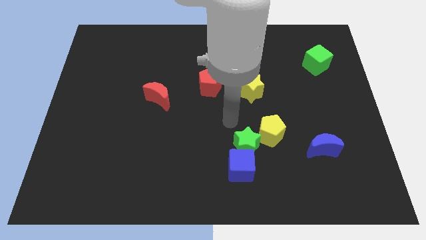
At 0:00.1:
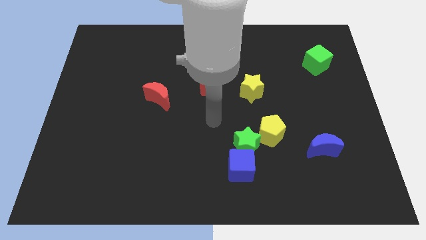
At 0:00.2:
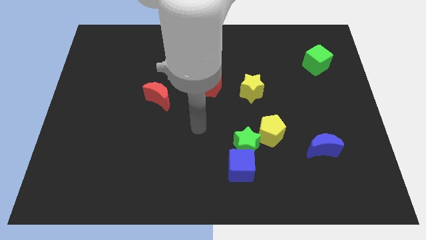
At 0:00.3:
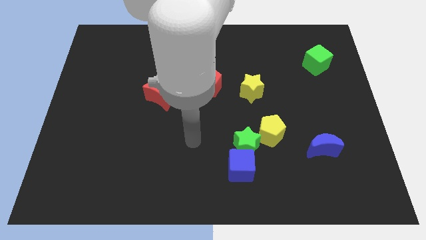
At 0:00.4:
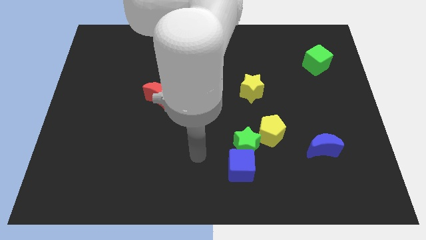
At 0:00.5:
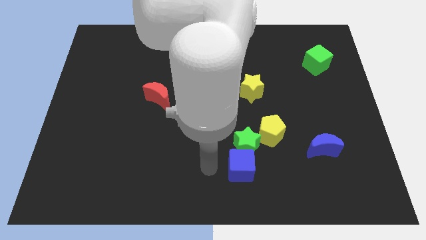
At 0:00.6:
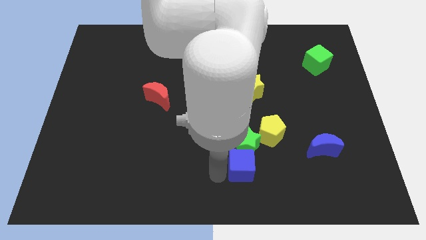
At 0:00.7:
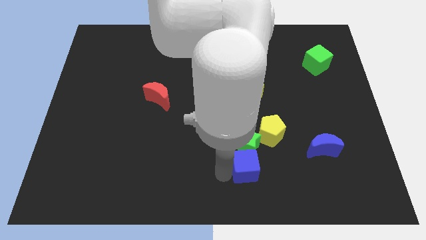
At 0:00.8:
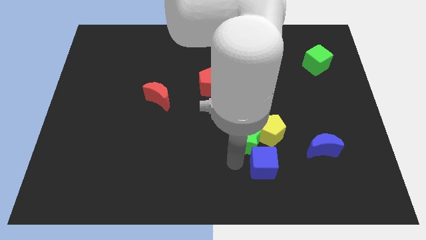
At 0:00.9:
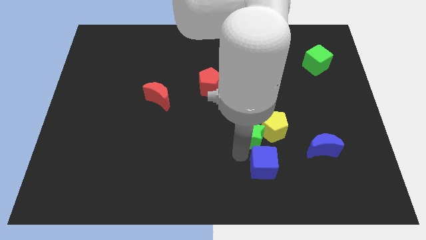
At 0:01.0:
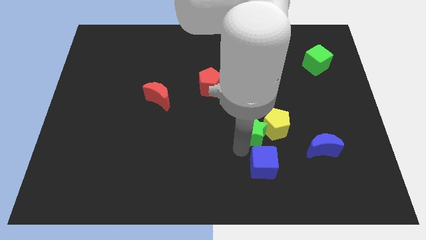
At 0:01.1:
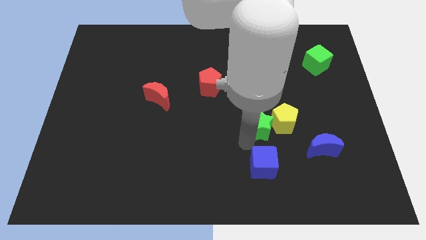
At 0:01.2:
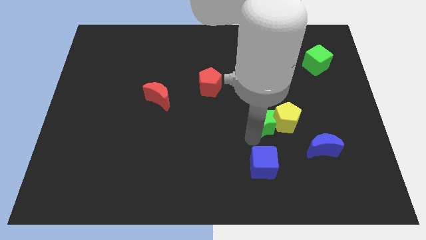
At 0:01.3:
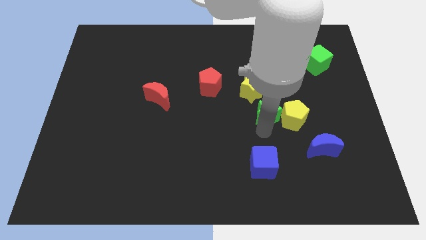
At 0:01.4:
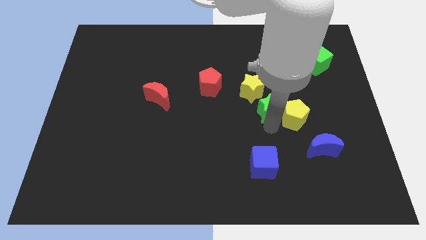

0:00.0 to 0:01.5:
move the green star above the blue cube

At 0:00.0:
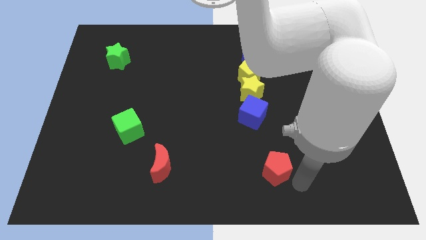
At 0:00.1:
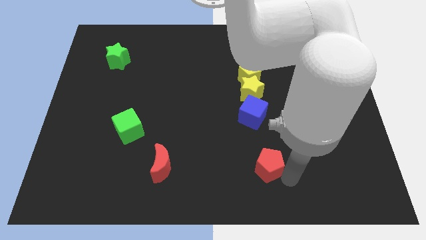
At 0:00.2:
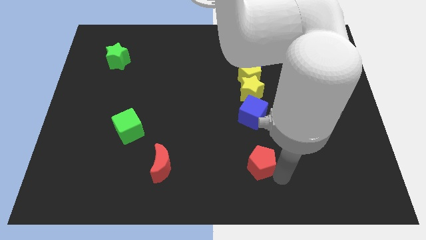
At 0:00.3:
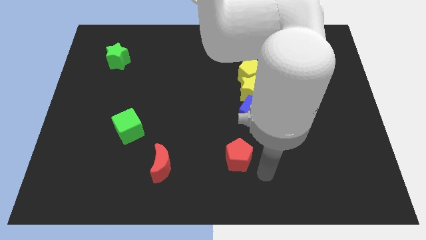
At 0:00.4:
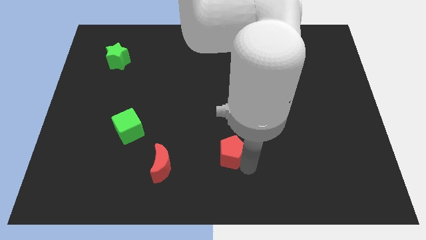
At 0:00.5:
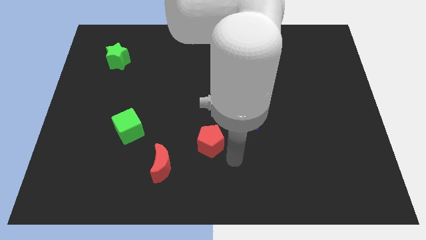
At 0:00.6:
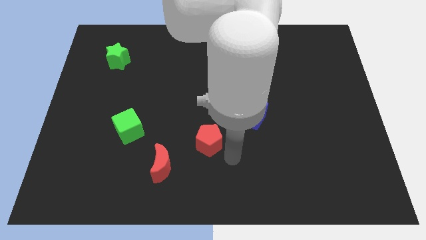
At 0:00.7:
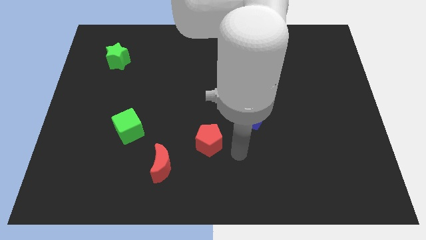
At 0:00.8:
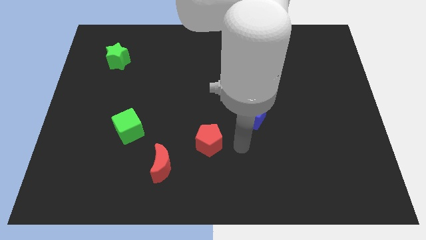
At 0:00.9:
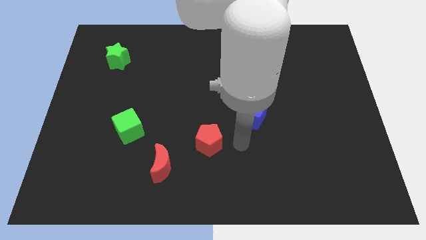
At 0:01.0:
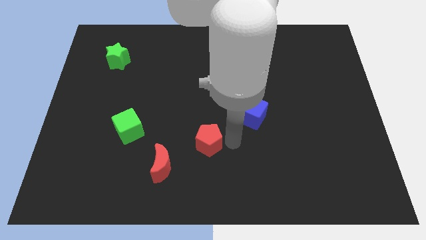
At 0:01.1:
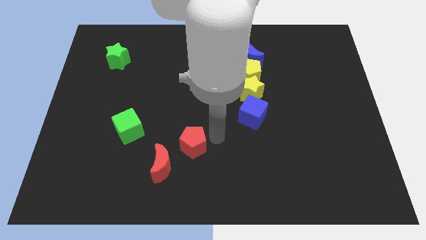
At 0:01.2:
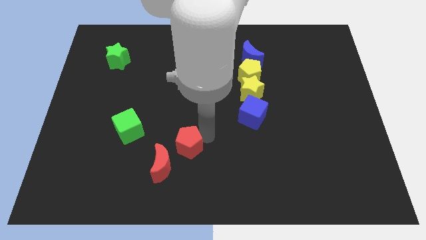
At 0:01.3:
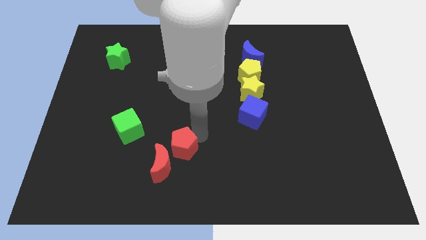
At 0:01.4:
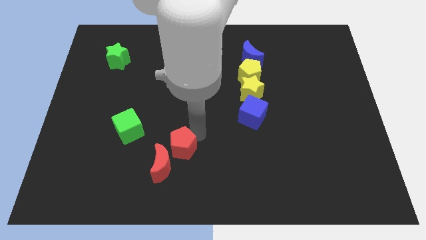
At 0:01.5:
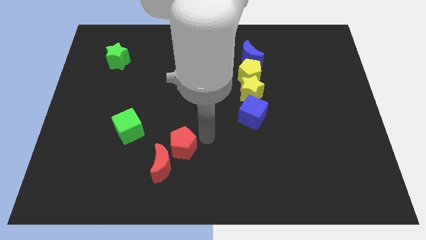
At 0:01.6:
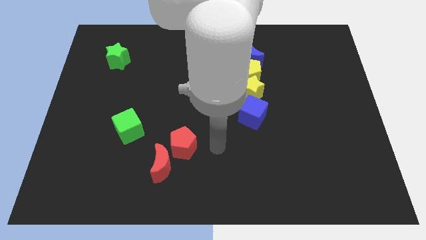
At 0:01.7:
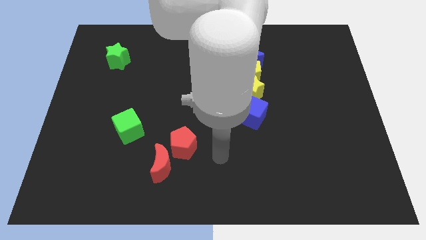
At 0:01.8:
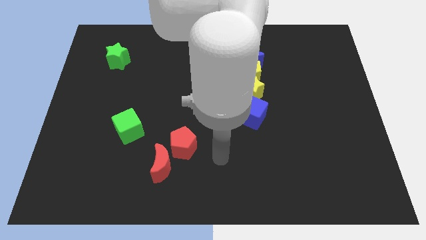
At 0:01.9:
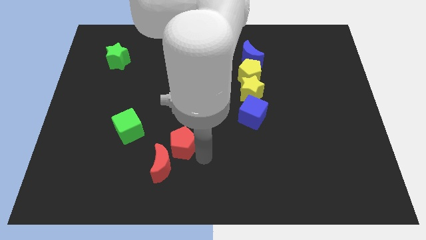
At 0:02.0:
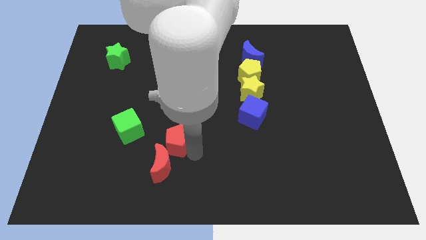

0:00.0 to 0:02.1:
move the red pentagon to the top right of red crescent

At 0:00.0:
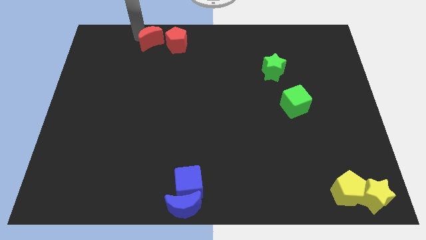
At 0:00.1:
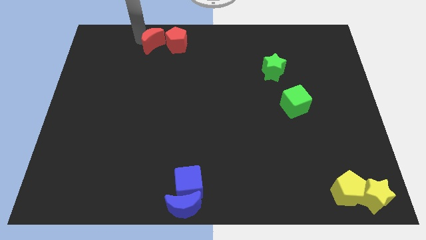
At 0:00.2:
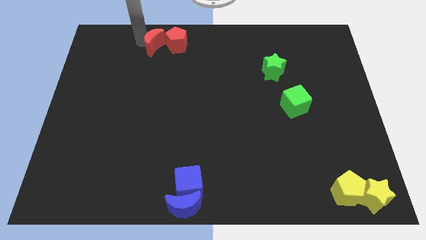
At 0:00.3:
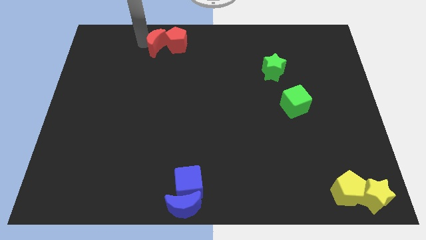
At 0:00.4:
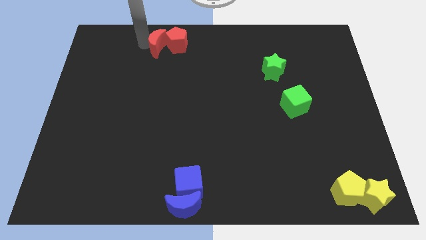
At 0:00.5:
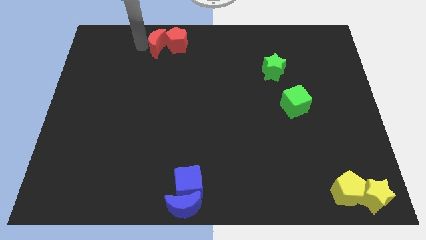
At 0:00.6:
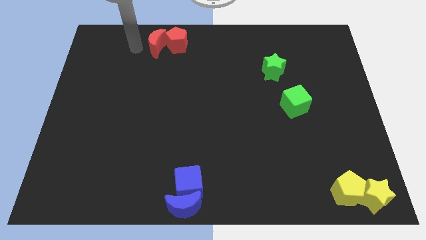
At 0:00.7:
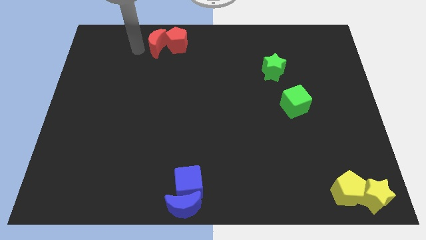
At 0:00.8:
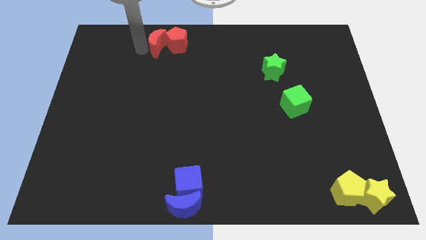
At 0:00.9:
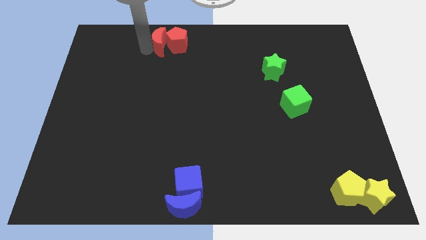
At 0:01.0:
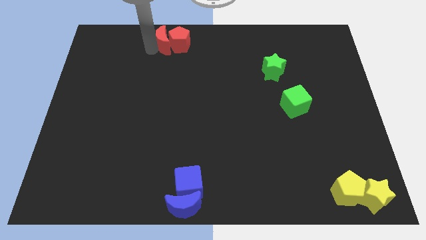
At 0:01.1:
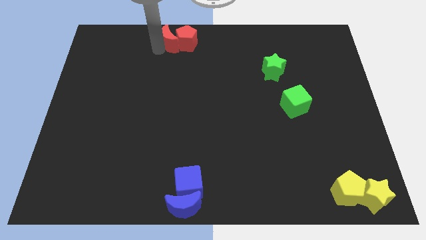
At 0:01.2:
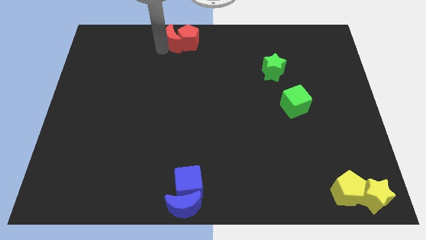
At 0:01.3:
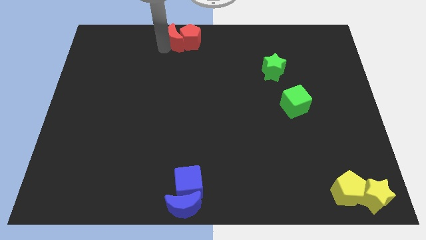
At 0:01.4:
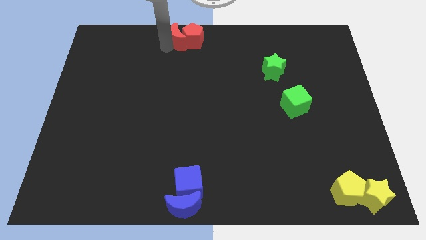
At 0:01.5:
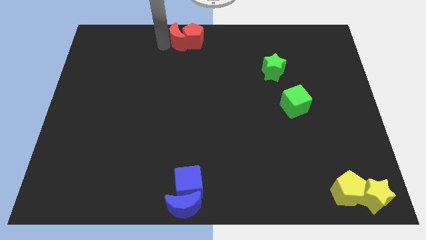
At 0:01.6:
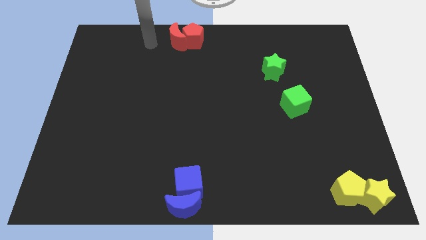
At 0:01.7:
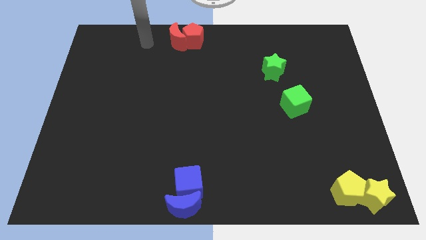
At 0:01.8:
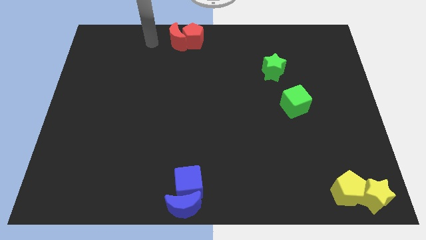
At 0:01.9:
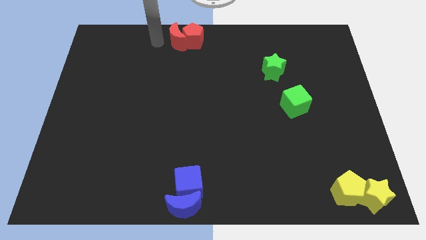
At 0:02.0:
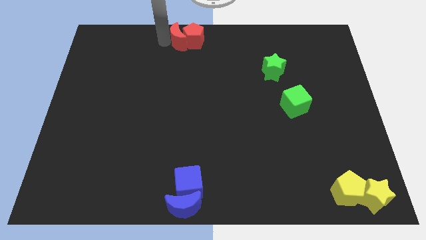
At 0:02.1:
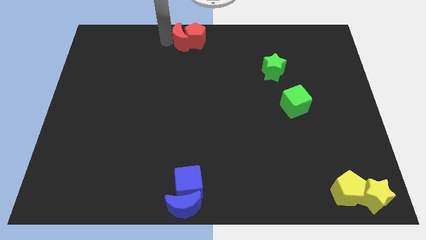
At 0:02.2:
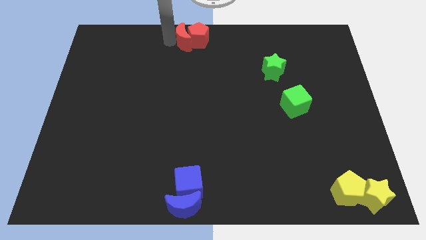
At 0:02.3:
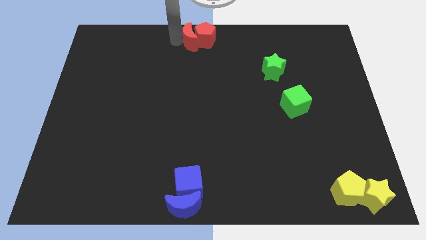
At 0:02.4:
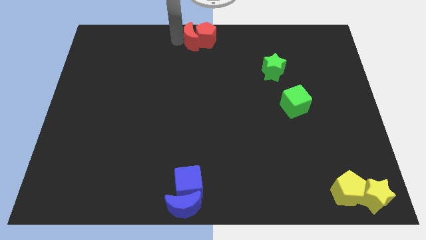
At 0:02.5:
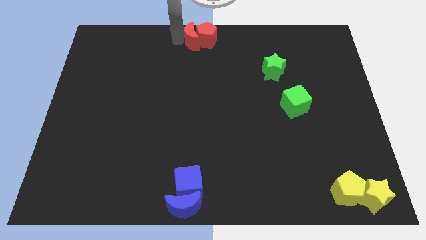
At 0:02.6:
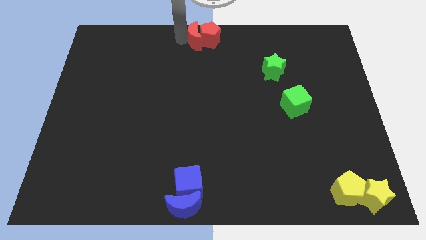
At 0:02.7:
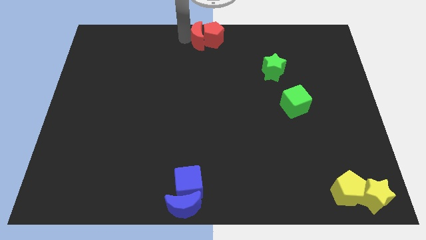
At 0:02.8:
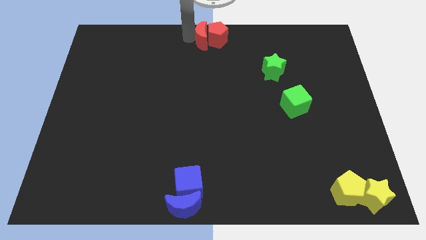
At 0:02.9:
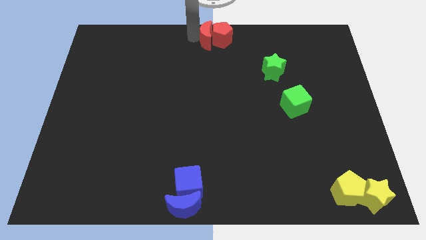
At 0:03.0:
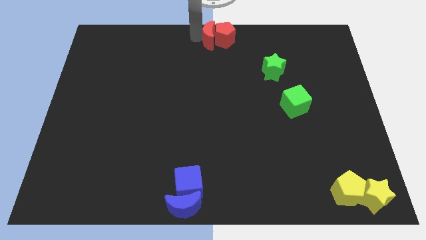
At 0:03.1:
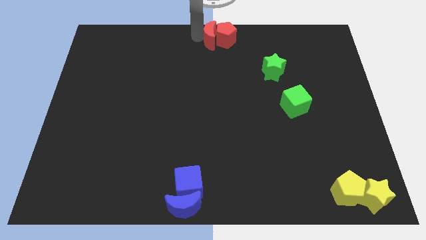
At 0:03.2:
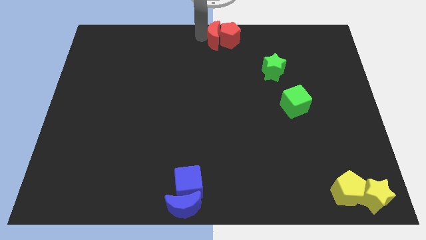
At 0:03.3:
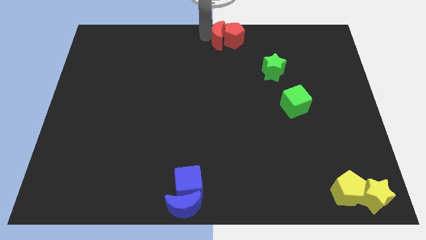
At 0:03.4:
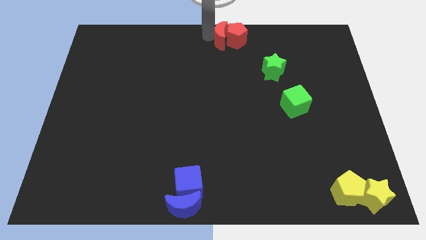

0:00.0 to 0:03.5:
place the red blocks at the center of the board

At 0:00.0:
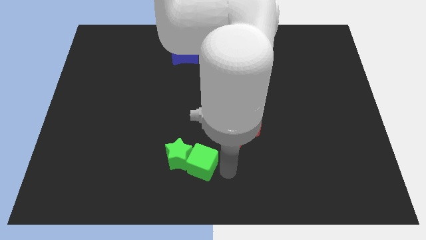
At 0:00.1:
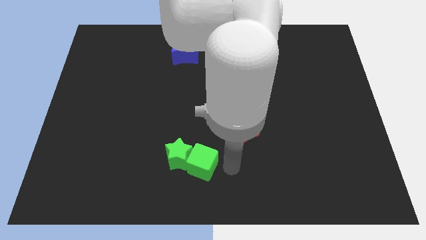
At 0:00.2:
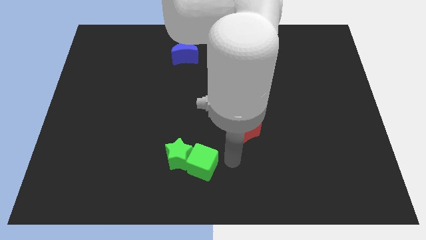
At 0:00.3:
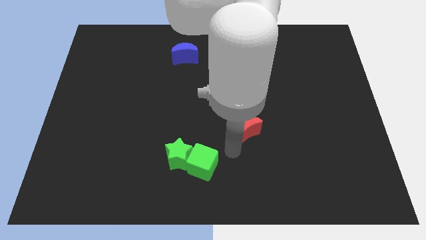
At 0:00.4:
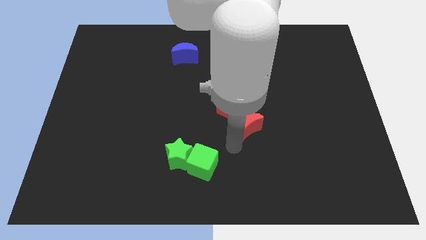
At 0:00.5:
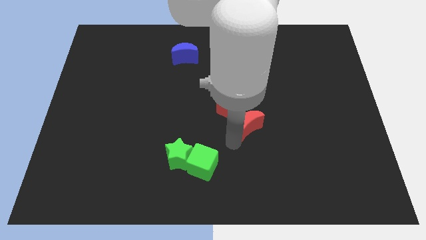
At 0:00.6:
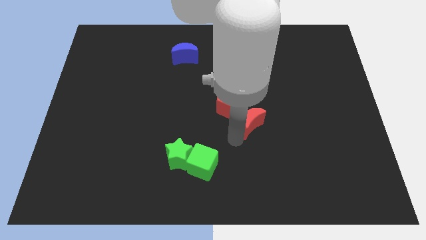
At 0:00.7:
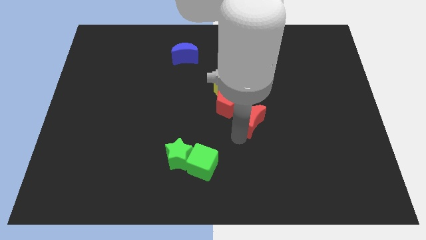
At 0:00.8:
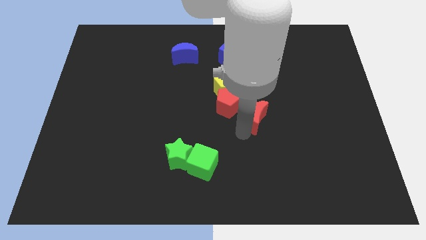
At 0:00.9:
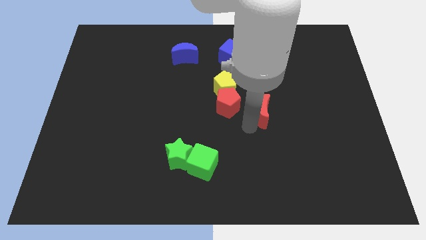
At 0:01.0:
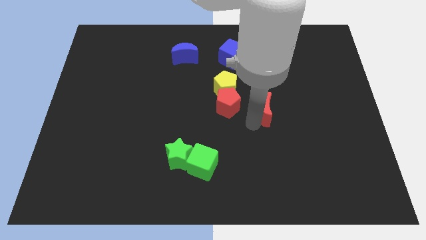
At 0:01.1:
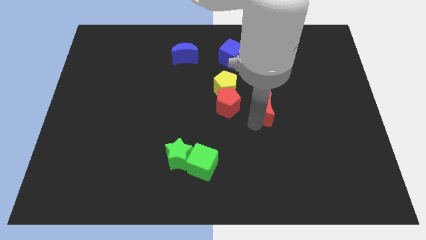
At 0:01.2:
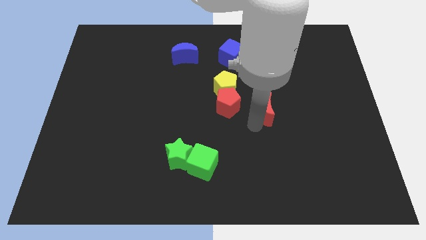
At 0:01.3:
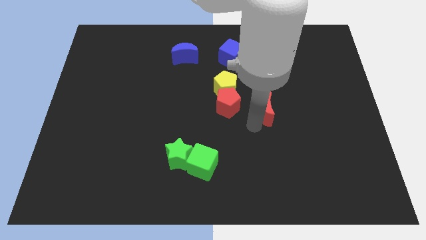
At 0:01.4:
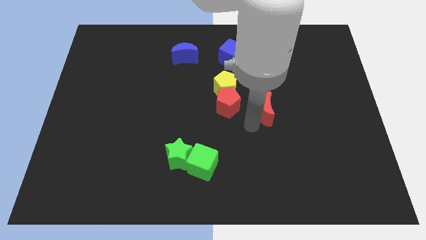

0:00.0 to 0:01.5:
move the red moon slightly up

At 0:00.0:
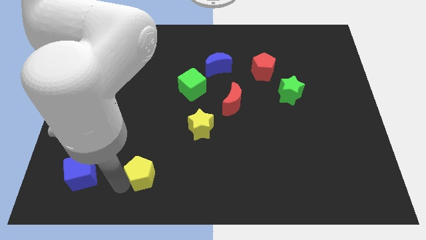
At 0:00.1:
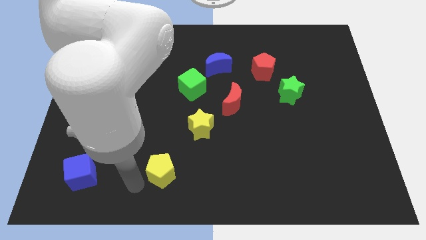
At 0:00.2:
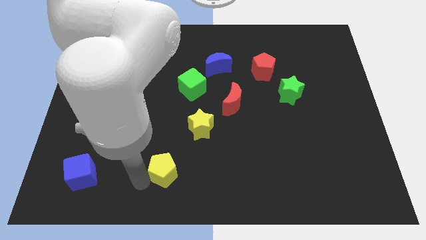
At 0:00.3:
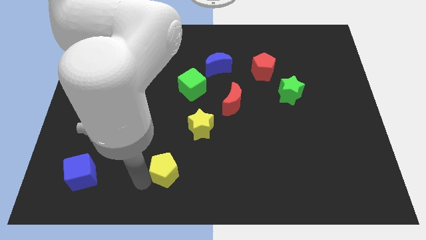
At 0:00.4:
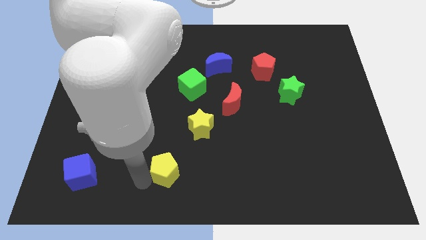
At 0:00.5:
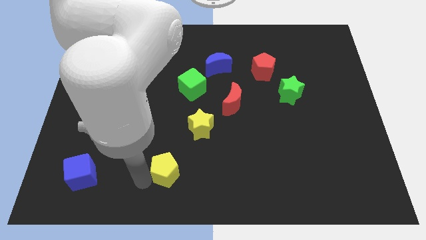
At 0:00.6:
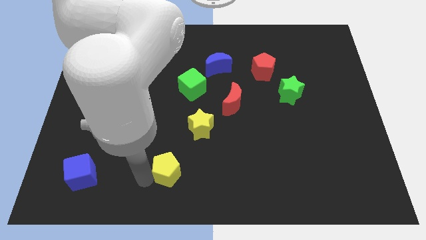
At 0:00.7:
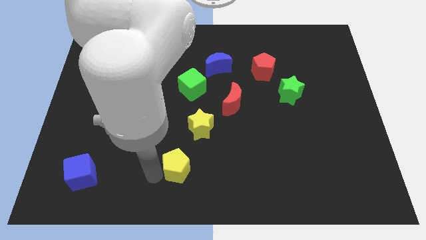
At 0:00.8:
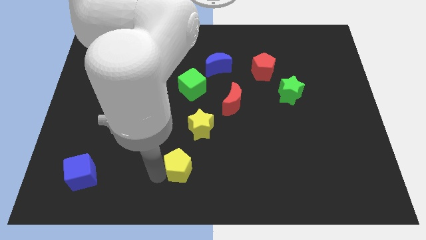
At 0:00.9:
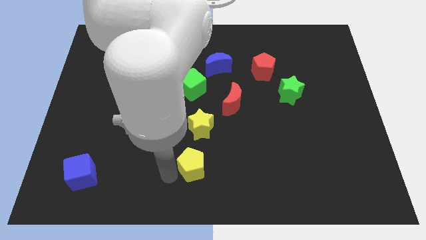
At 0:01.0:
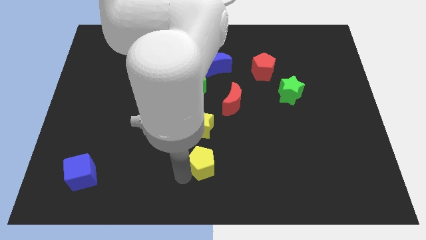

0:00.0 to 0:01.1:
move the yellow pentagon below the yellow star
